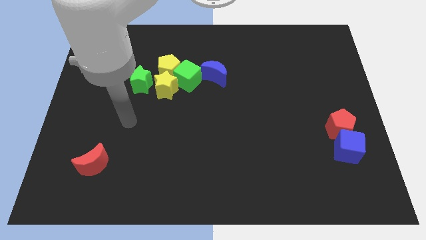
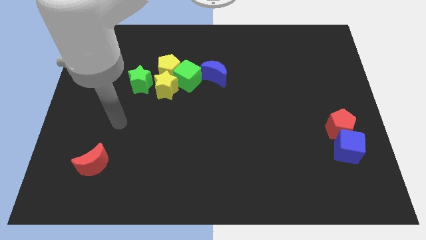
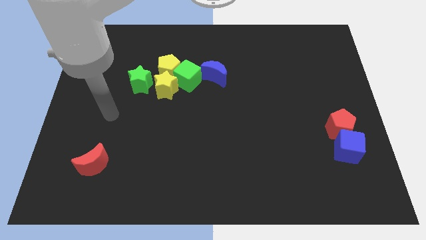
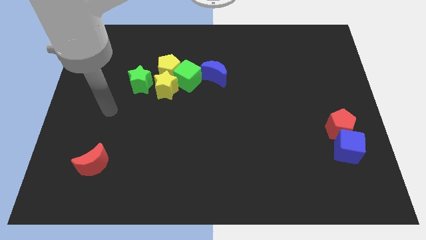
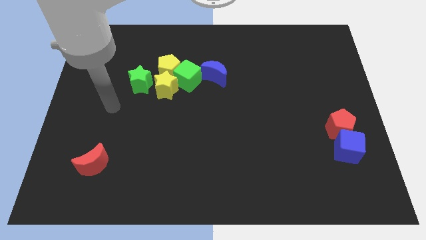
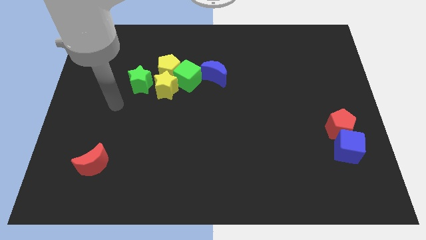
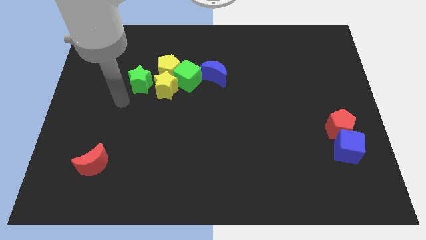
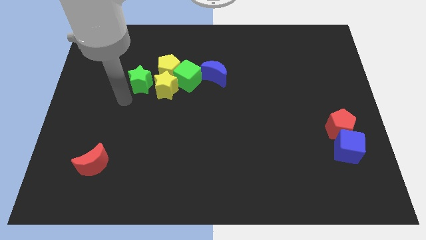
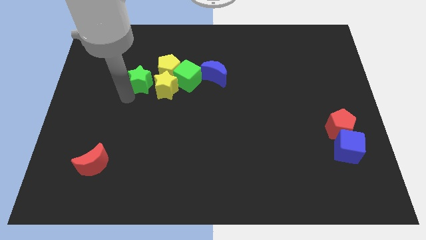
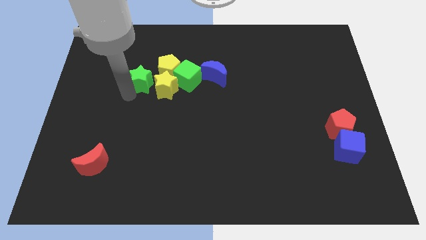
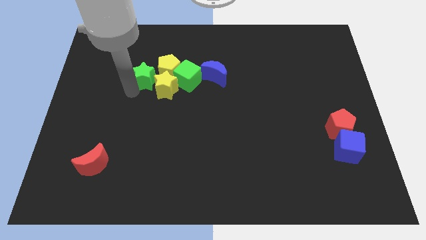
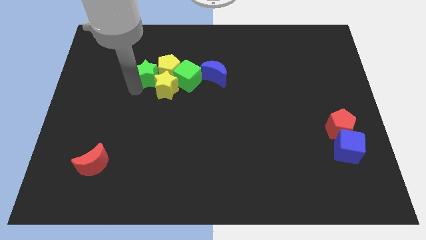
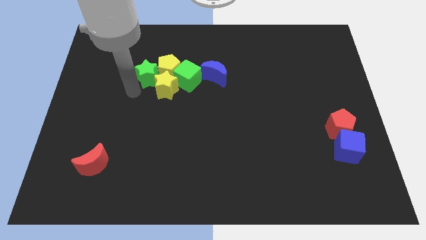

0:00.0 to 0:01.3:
push the green star into the yellow pentagon

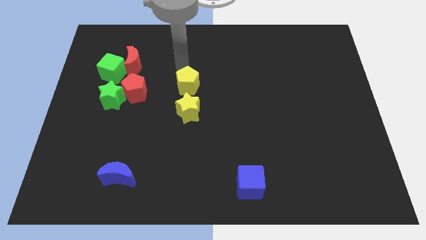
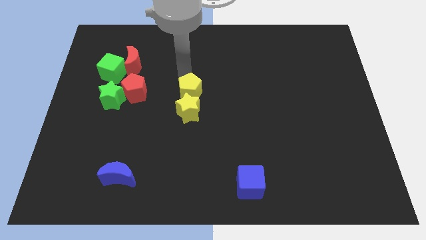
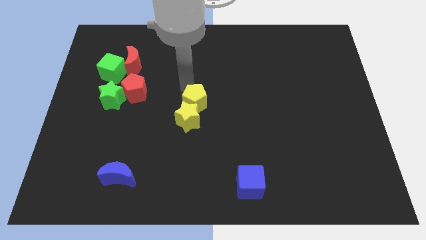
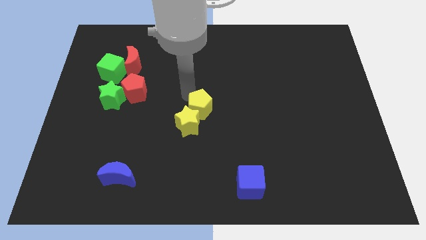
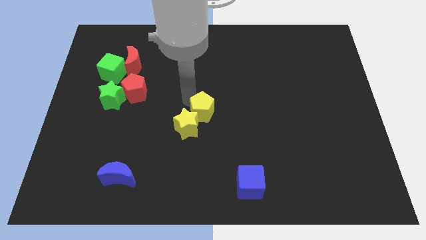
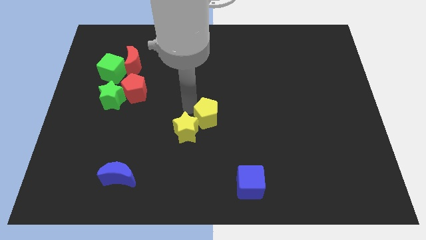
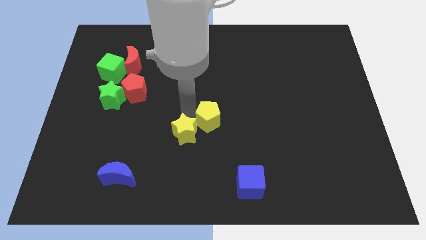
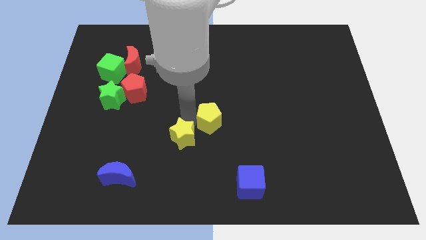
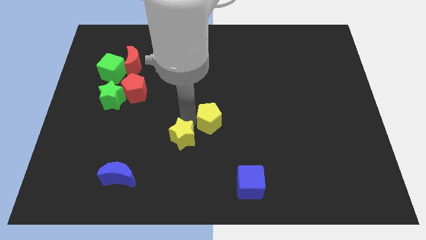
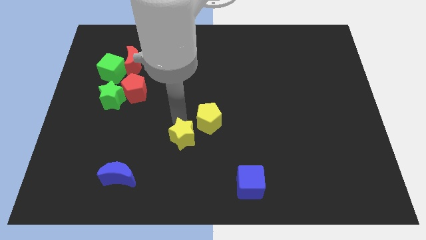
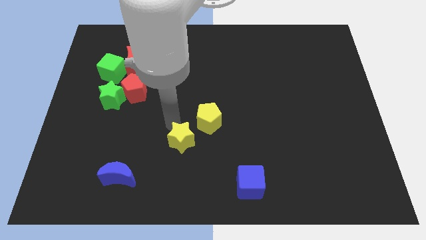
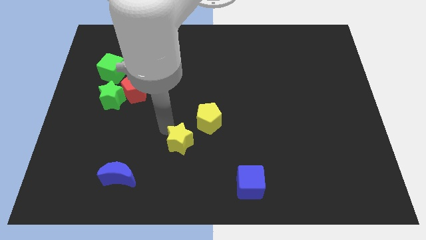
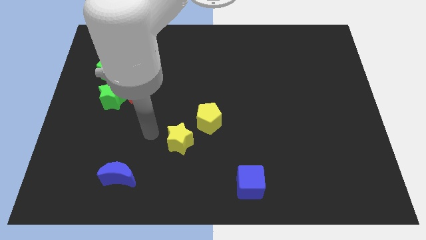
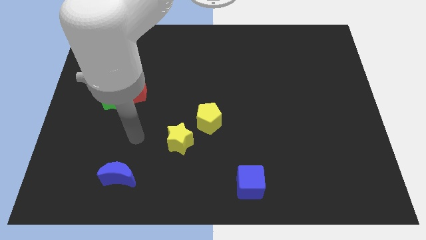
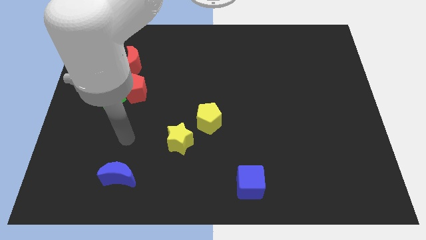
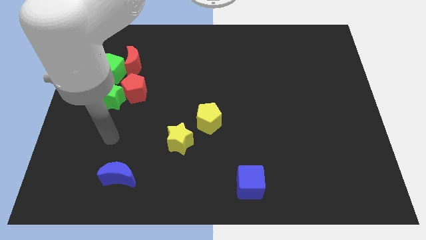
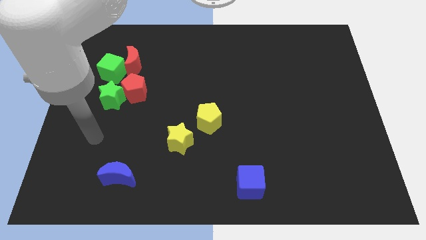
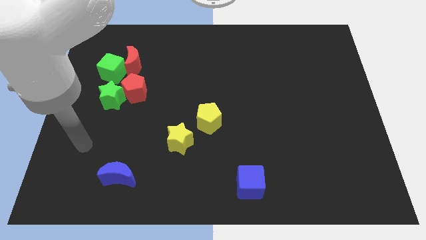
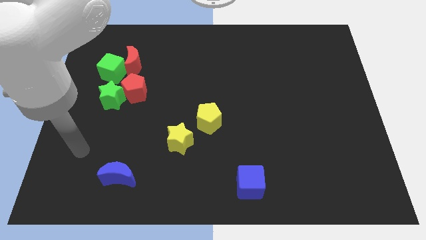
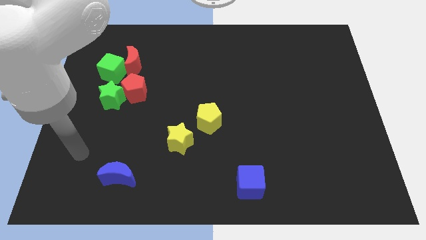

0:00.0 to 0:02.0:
separate yellow pentagon and yellow star

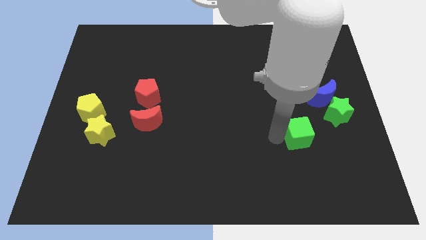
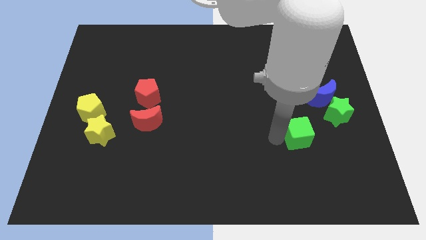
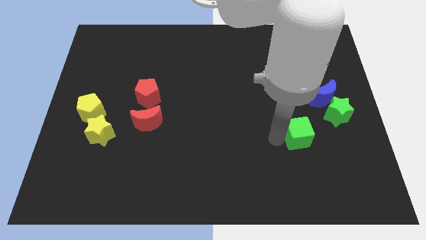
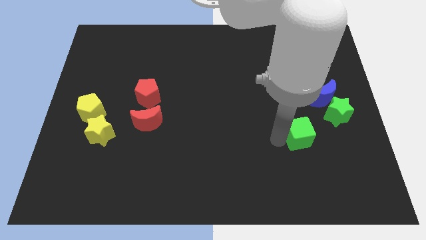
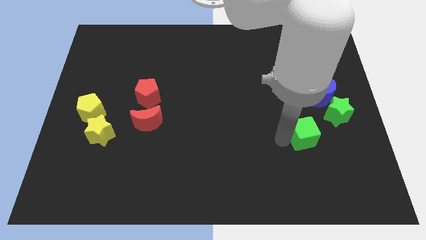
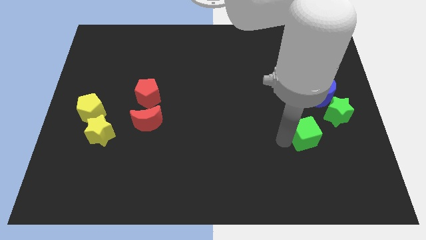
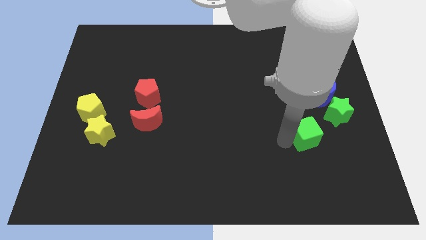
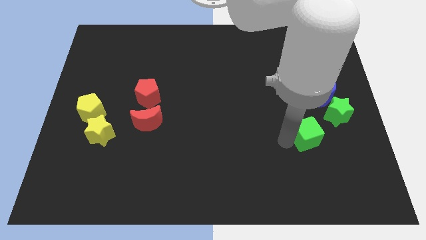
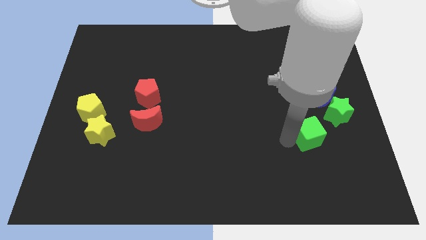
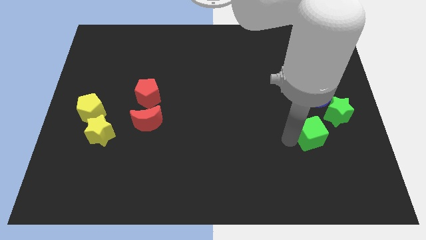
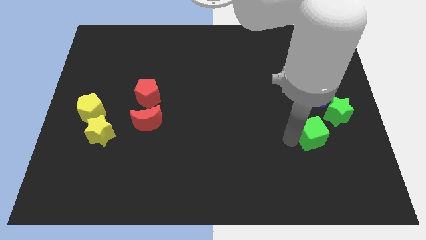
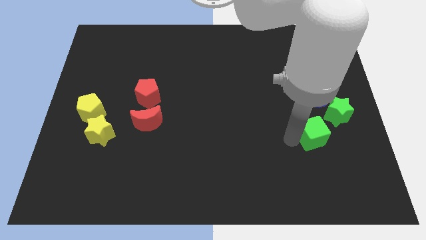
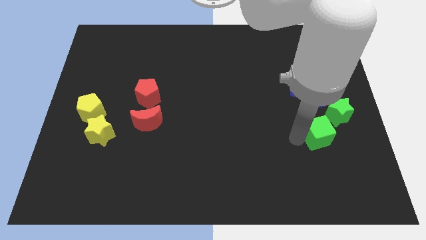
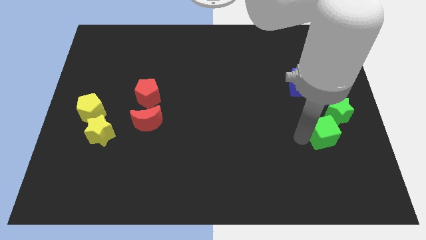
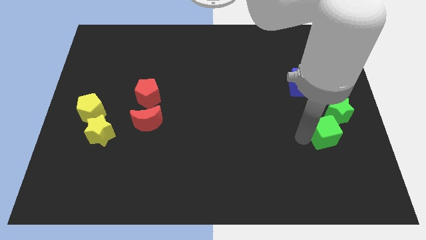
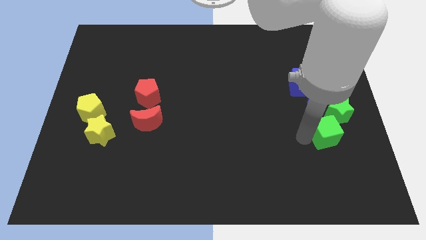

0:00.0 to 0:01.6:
place the green cube down the left side of the green star

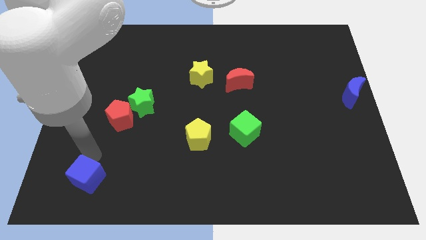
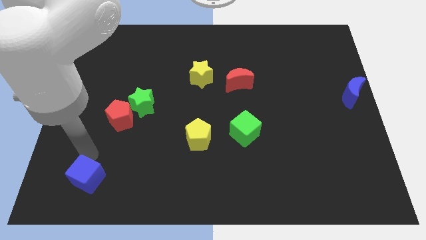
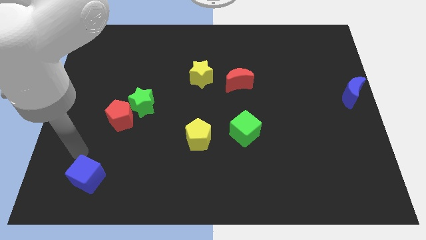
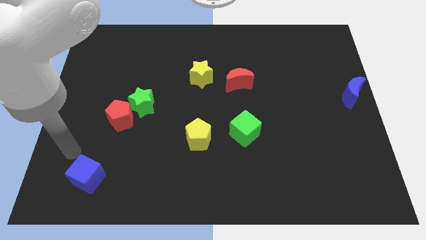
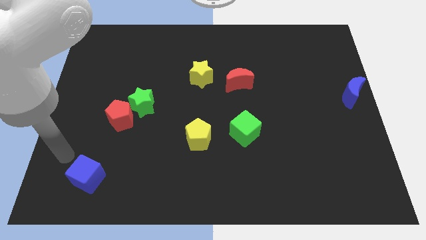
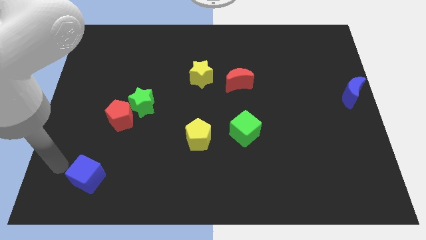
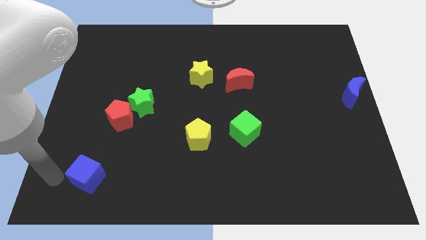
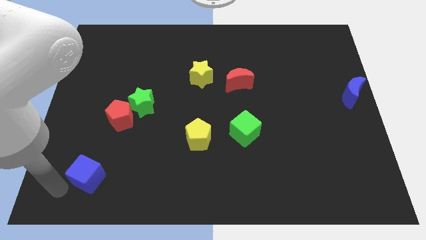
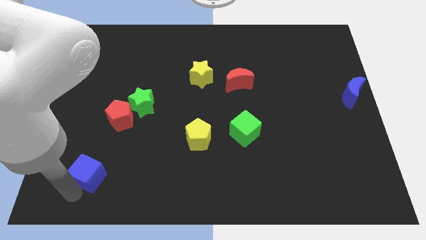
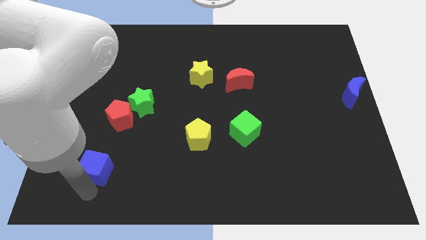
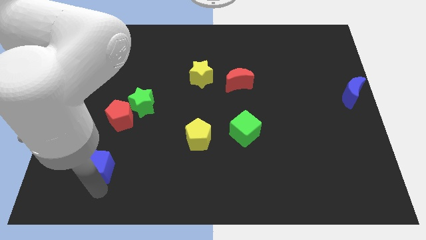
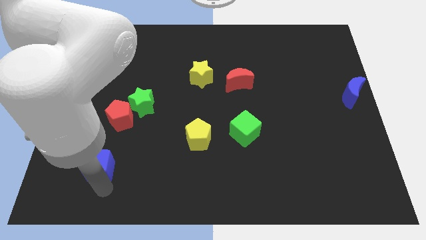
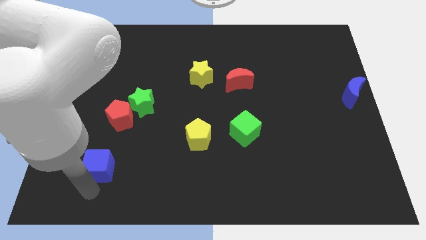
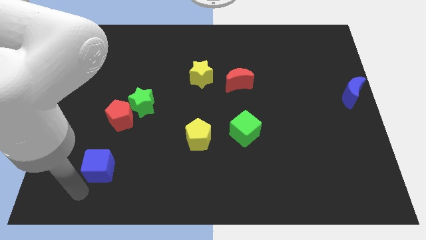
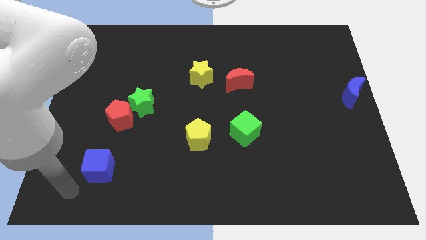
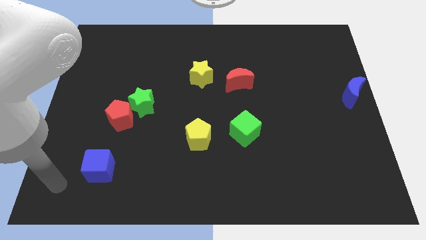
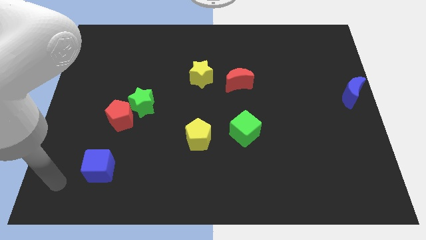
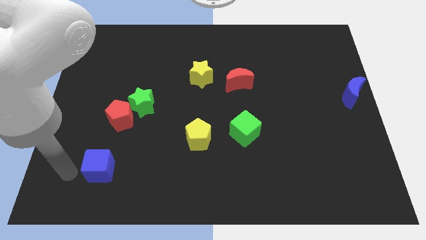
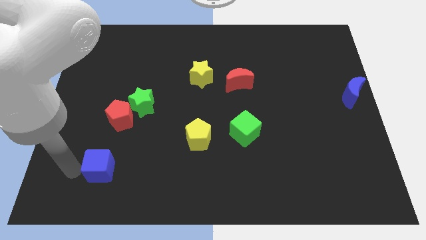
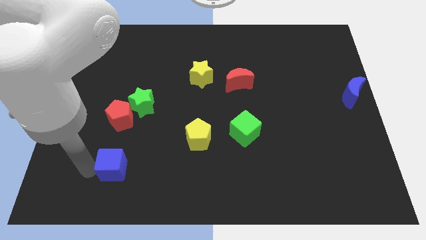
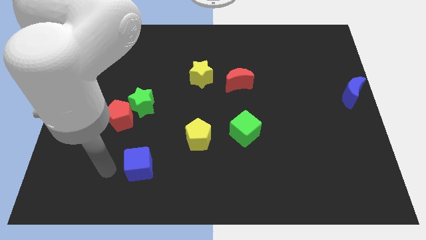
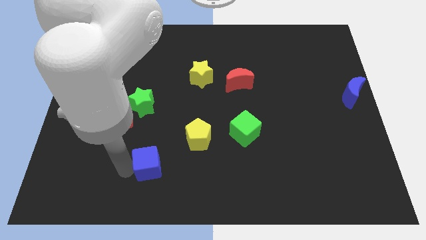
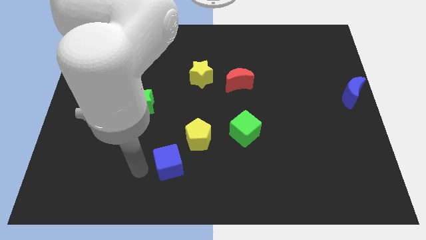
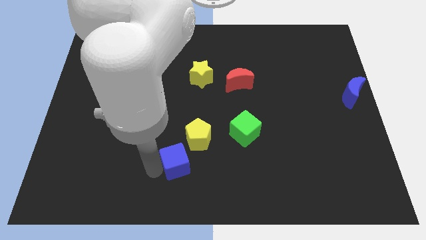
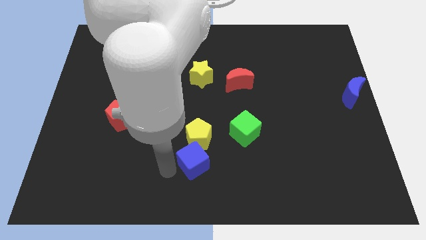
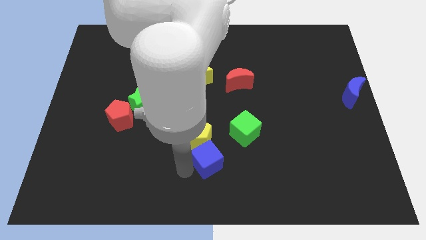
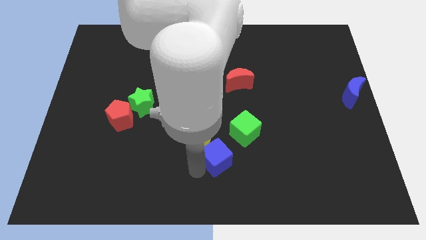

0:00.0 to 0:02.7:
place blue cube below yellow pentagon

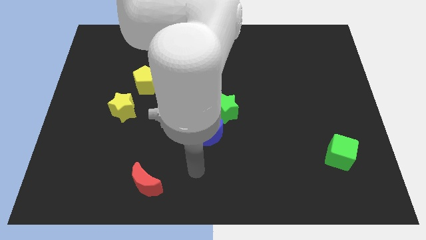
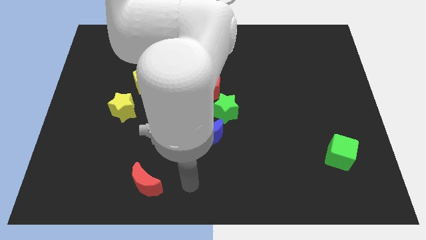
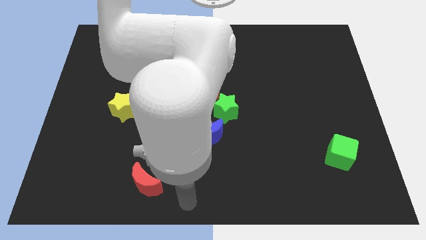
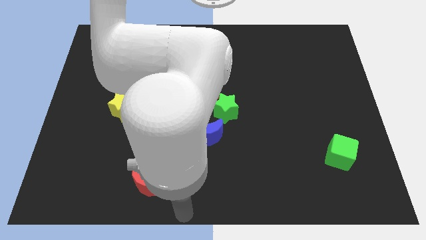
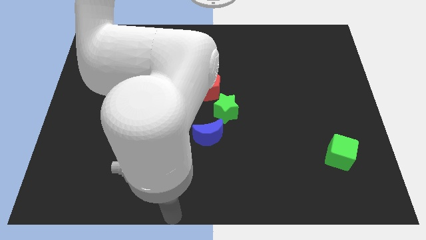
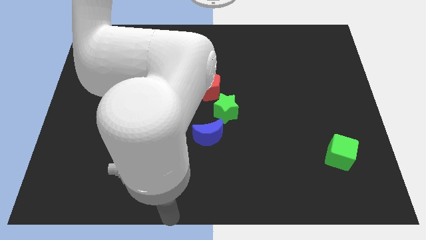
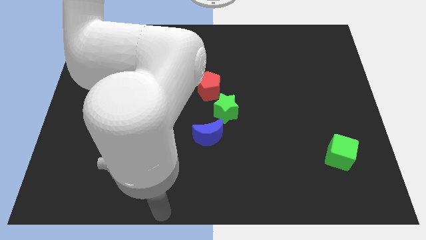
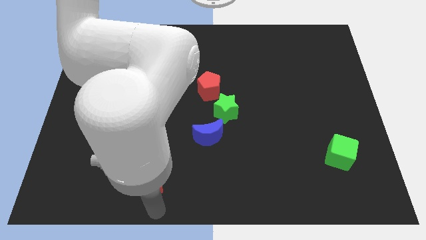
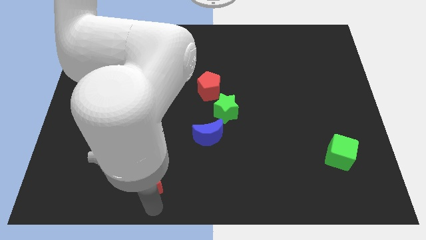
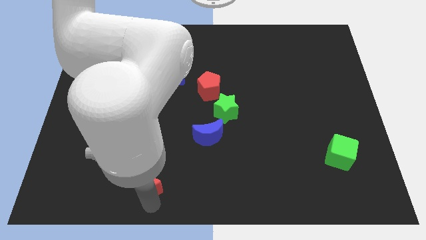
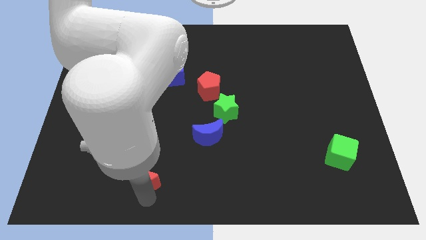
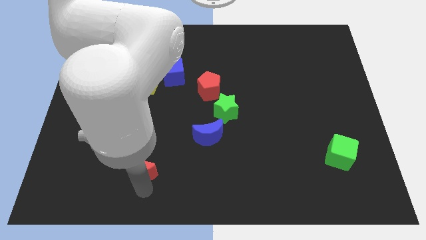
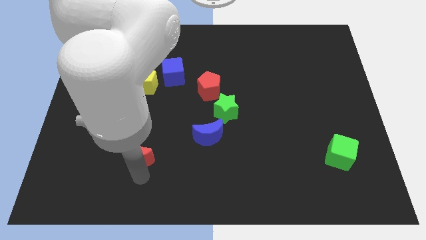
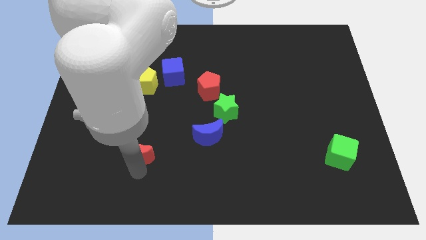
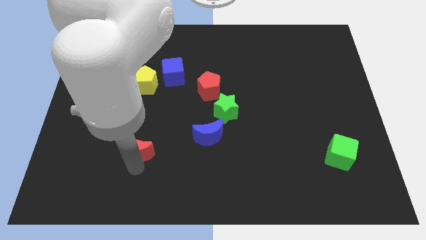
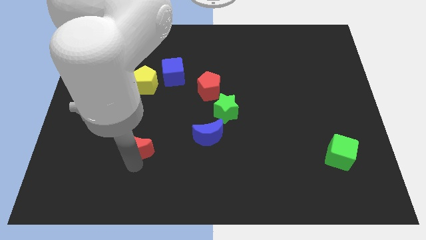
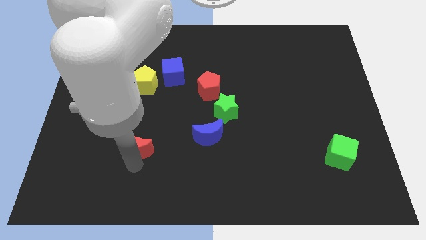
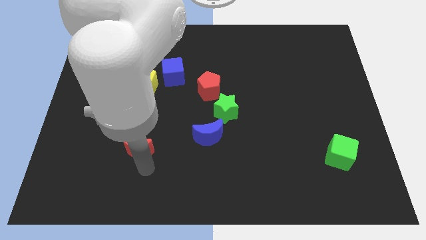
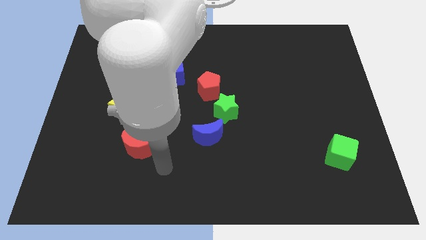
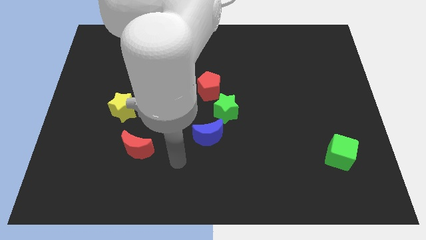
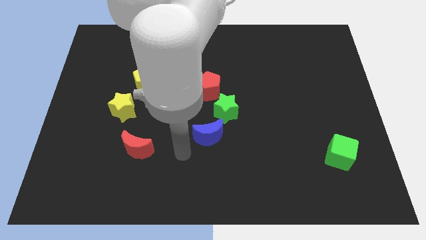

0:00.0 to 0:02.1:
move the red moon to the left of blue moon
